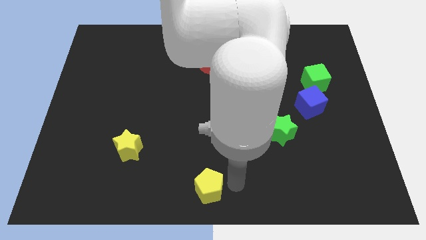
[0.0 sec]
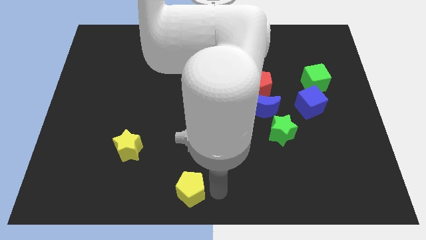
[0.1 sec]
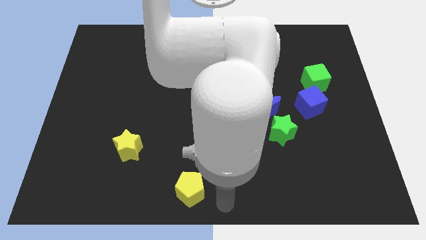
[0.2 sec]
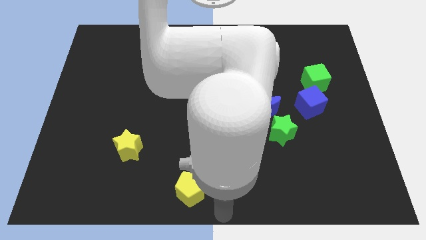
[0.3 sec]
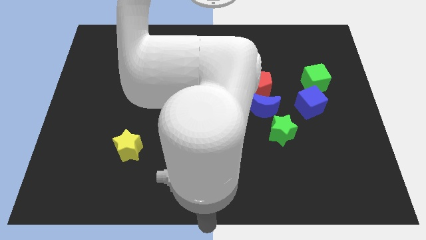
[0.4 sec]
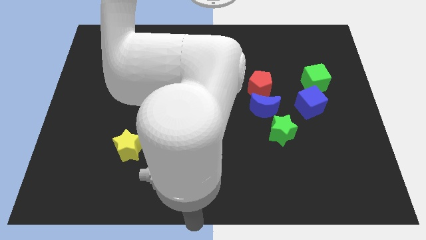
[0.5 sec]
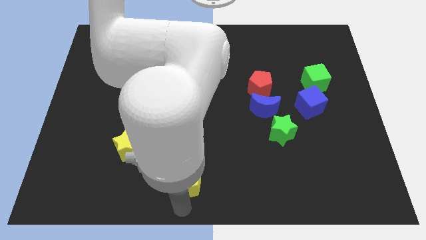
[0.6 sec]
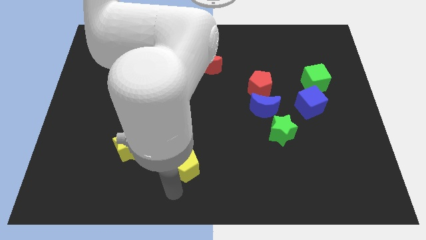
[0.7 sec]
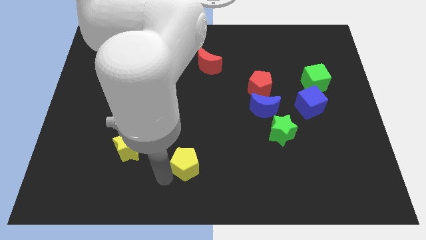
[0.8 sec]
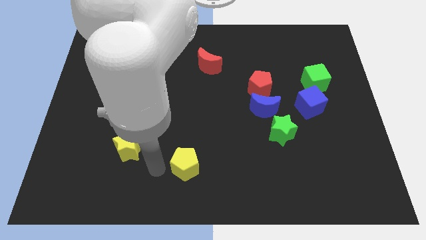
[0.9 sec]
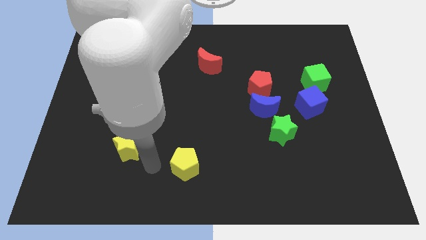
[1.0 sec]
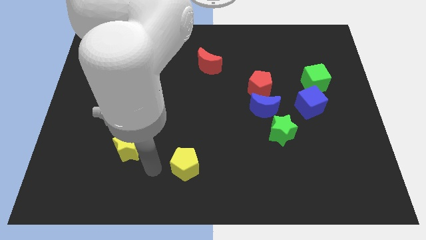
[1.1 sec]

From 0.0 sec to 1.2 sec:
push the yellow pentagon slightly upward

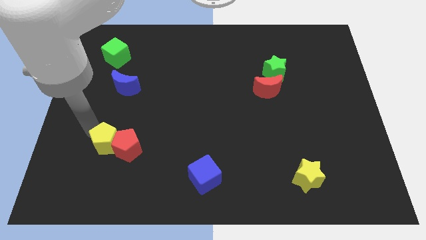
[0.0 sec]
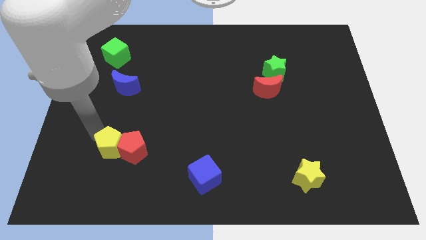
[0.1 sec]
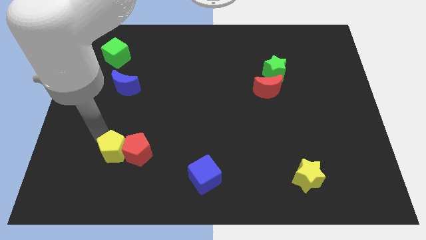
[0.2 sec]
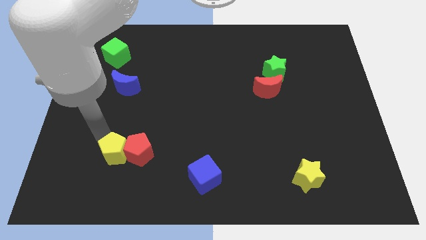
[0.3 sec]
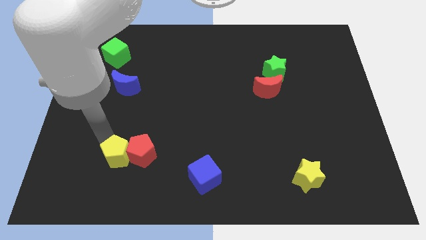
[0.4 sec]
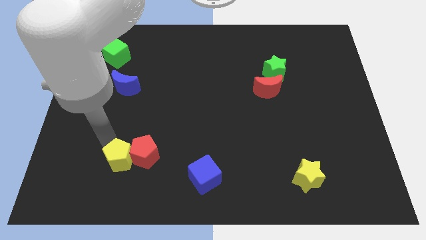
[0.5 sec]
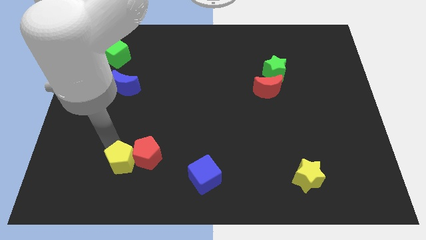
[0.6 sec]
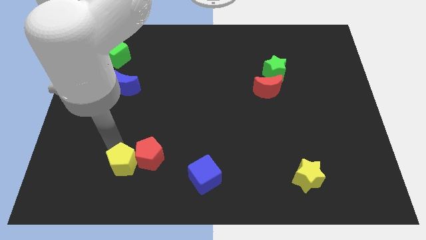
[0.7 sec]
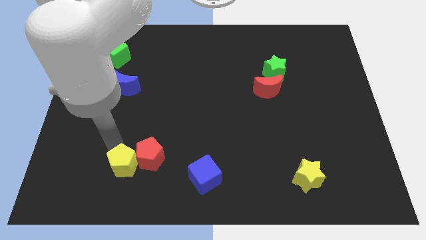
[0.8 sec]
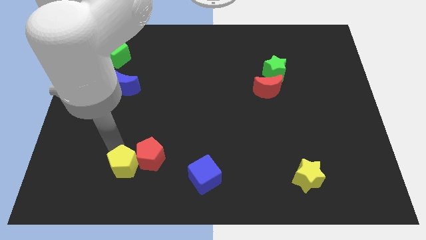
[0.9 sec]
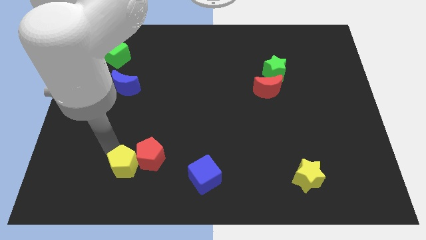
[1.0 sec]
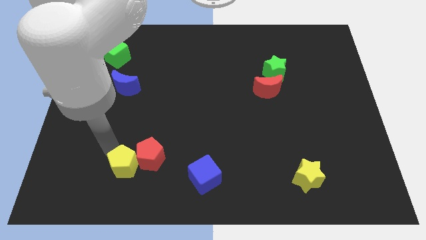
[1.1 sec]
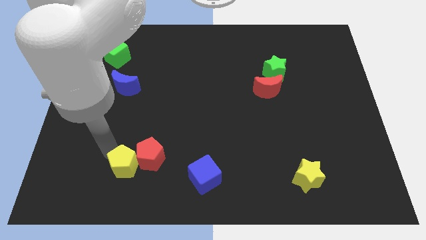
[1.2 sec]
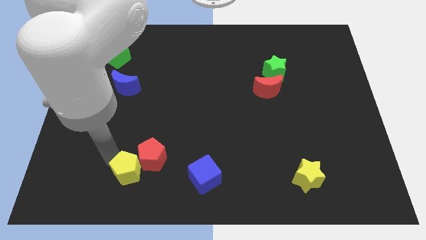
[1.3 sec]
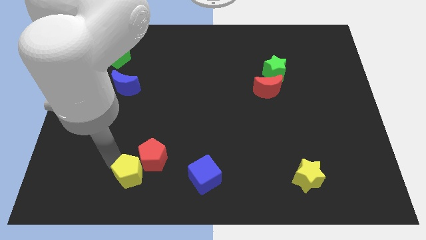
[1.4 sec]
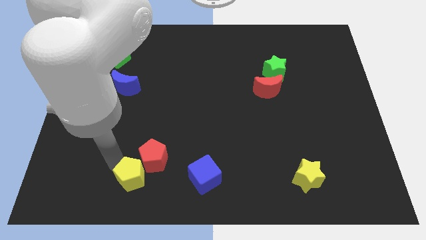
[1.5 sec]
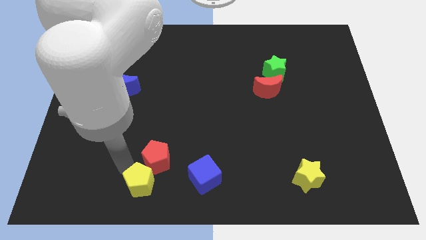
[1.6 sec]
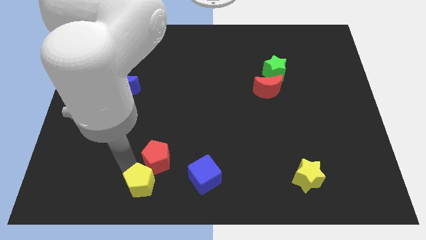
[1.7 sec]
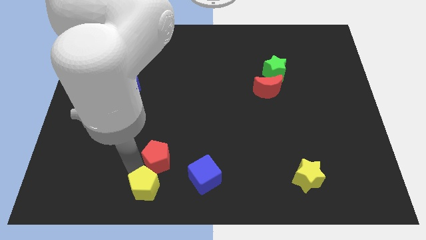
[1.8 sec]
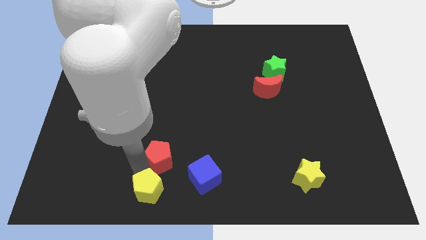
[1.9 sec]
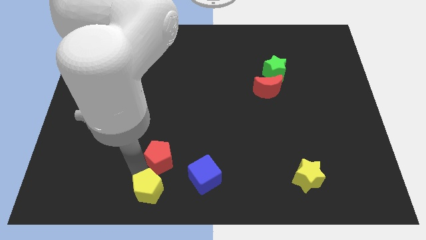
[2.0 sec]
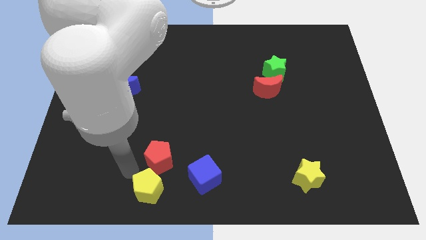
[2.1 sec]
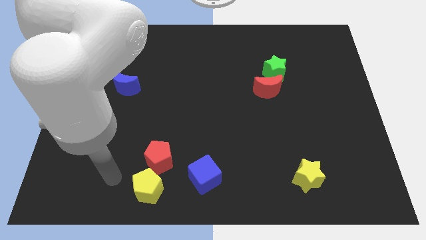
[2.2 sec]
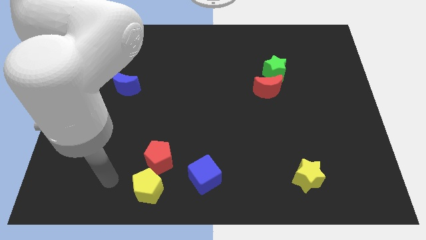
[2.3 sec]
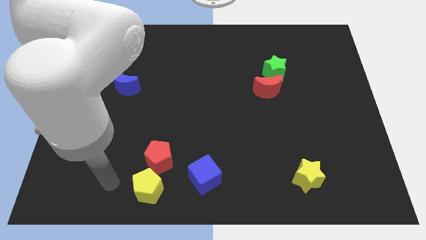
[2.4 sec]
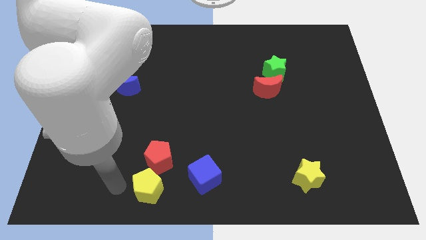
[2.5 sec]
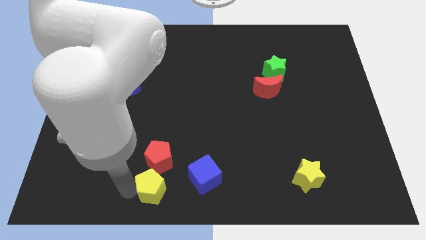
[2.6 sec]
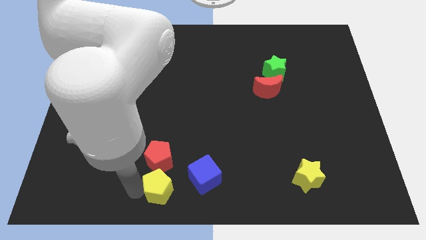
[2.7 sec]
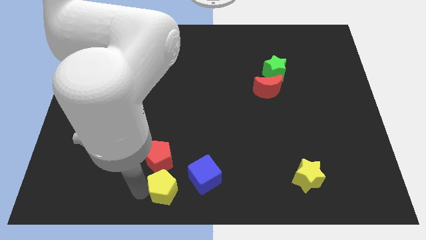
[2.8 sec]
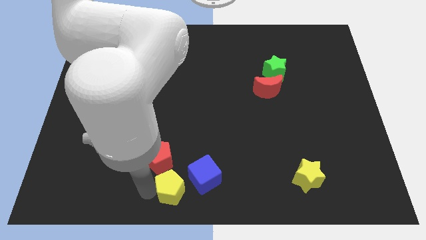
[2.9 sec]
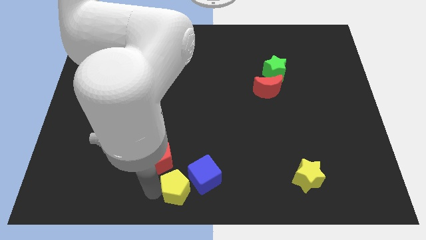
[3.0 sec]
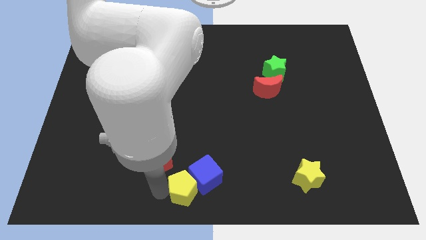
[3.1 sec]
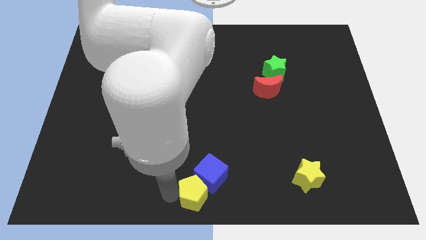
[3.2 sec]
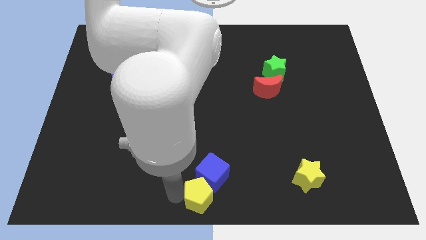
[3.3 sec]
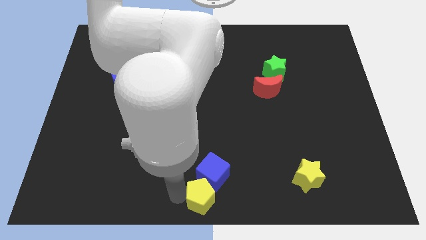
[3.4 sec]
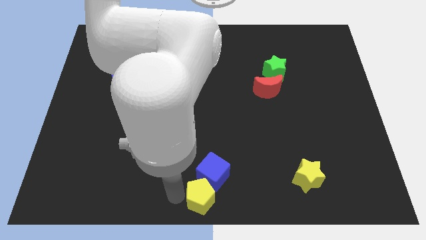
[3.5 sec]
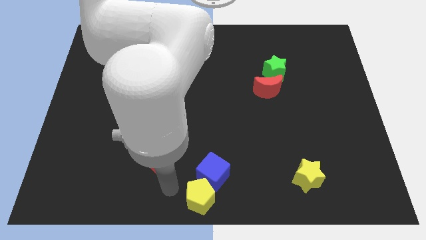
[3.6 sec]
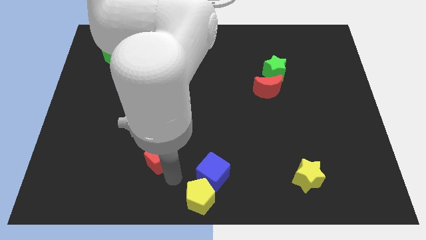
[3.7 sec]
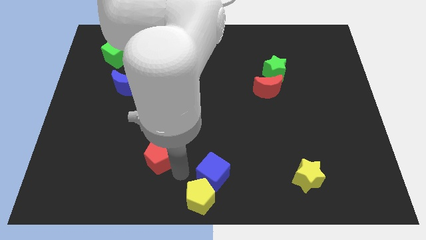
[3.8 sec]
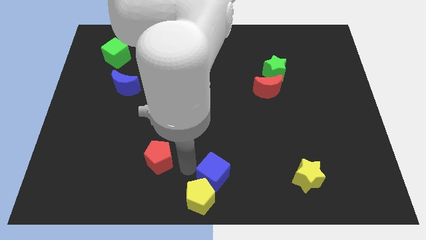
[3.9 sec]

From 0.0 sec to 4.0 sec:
push the yellow pentagon below the blue cube

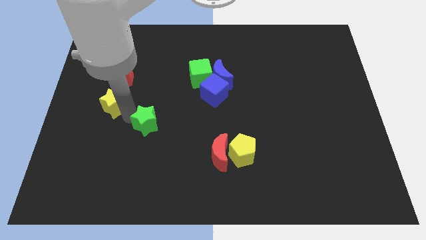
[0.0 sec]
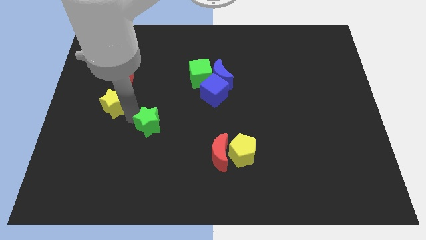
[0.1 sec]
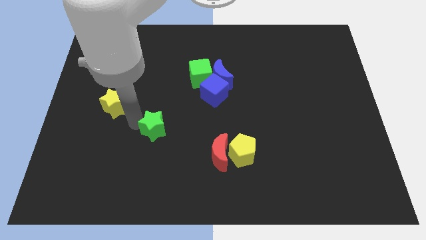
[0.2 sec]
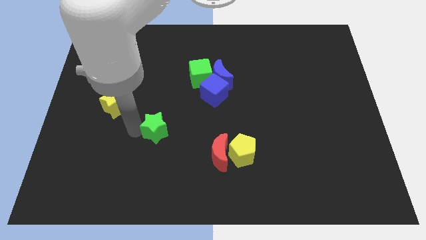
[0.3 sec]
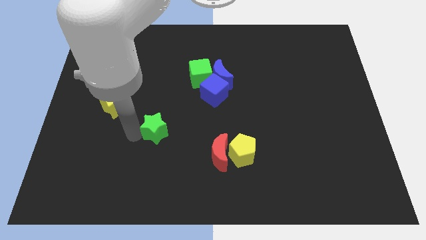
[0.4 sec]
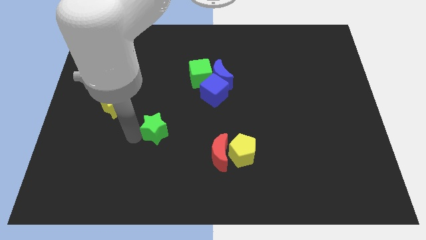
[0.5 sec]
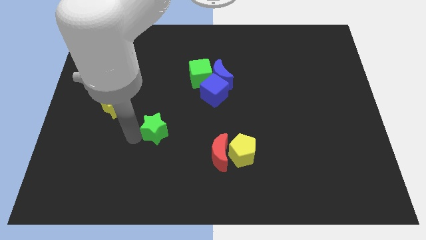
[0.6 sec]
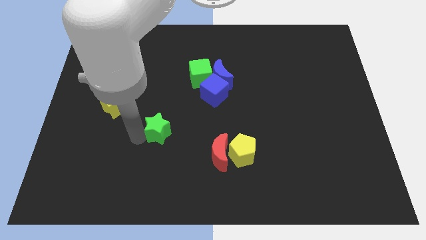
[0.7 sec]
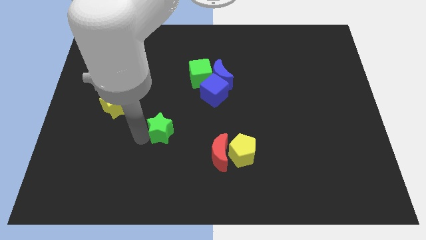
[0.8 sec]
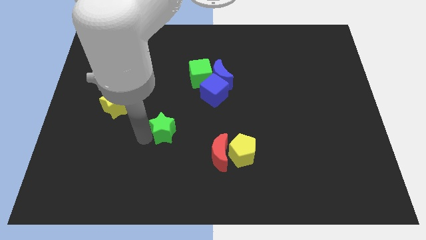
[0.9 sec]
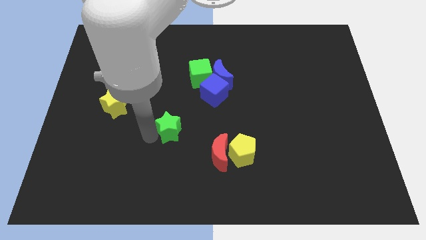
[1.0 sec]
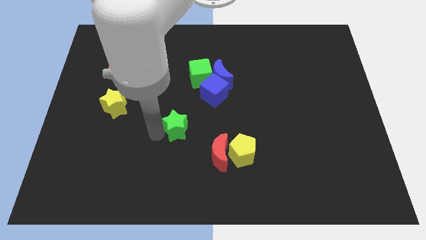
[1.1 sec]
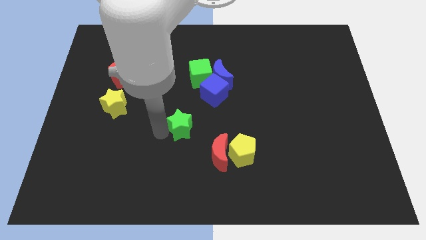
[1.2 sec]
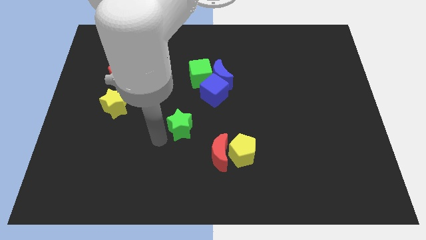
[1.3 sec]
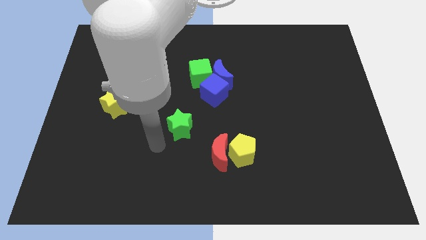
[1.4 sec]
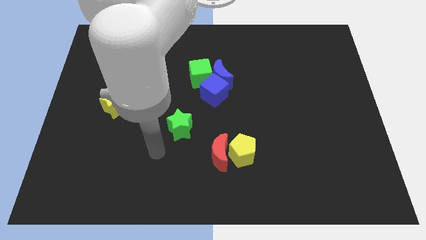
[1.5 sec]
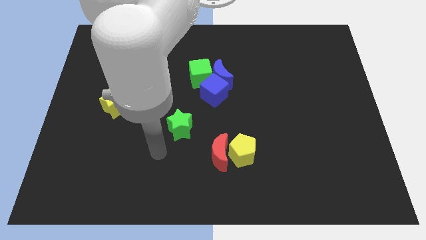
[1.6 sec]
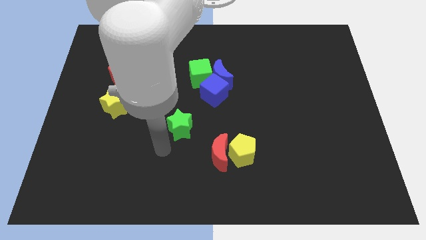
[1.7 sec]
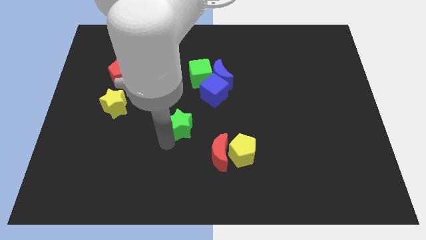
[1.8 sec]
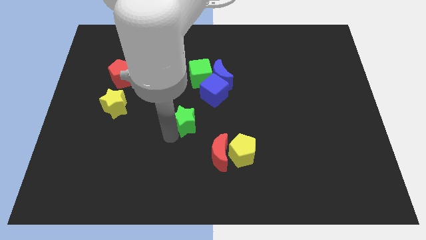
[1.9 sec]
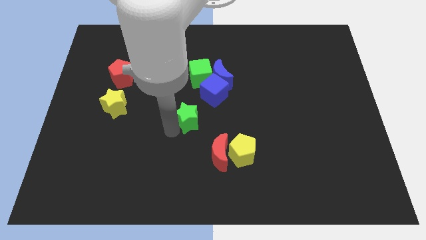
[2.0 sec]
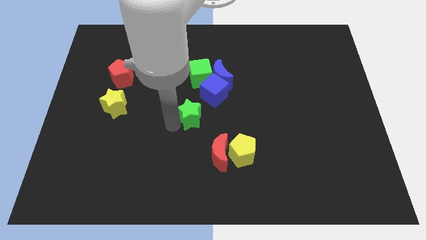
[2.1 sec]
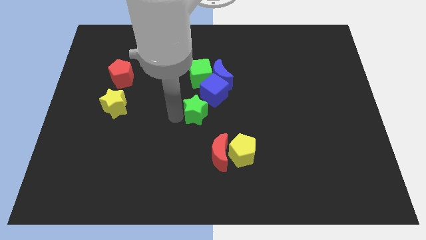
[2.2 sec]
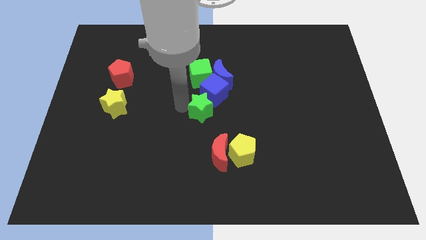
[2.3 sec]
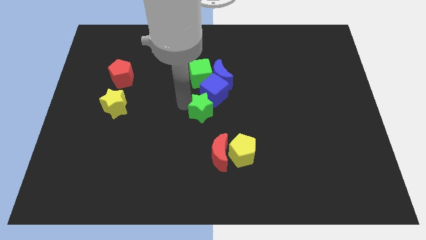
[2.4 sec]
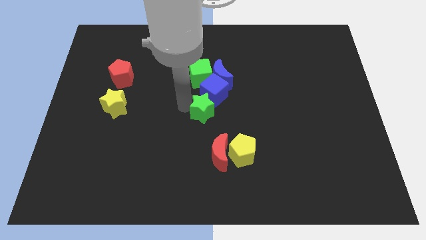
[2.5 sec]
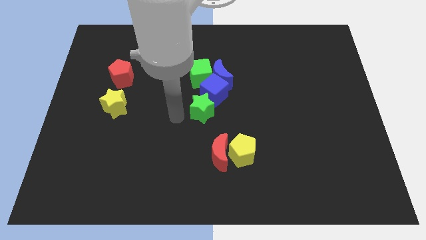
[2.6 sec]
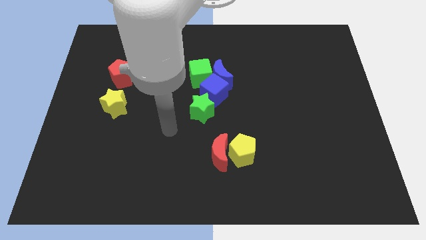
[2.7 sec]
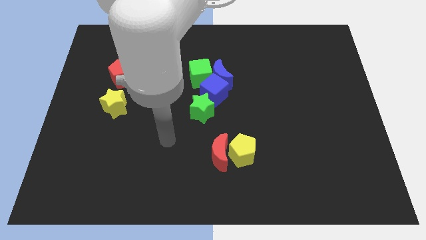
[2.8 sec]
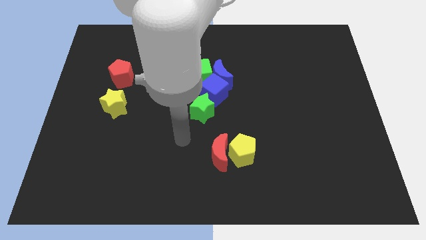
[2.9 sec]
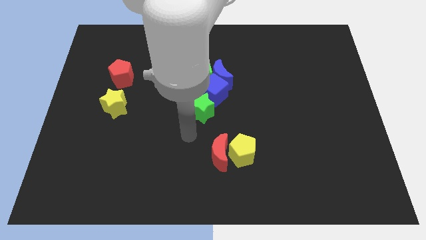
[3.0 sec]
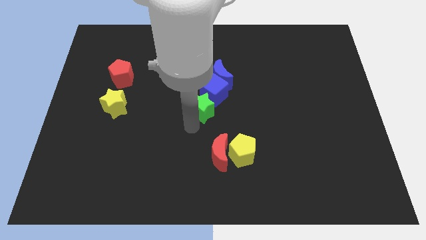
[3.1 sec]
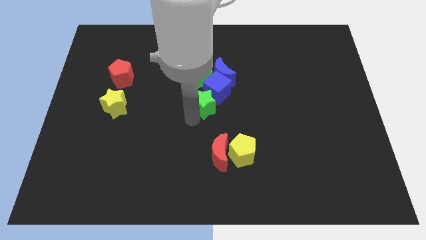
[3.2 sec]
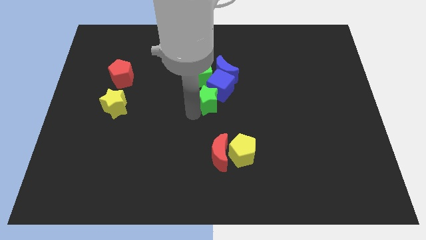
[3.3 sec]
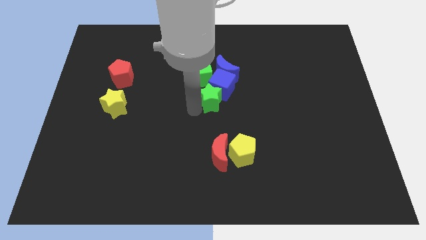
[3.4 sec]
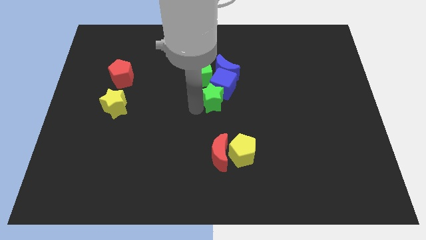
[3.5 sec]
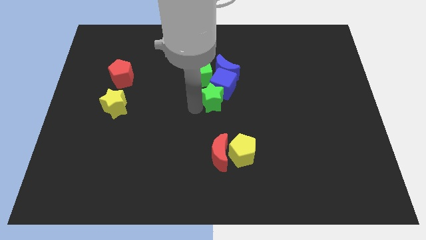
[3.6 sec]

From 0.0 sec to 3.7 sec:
move the green star into the group of blocks

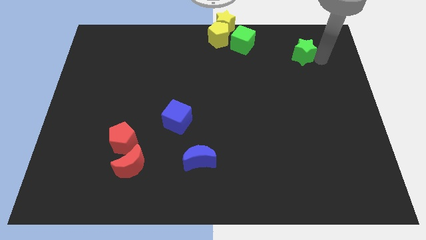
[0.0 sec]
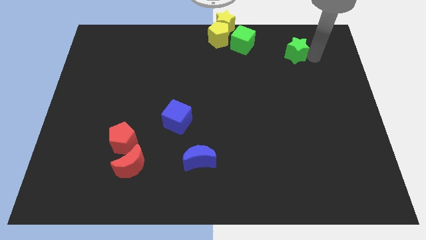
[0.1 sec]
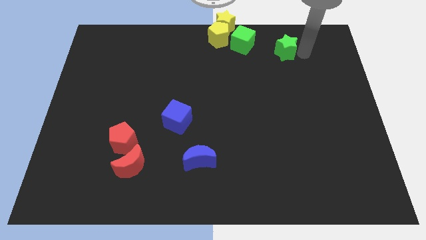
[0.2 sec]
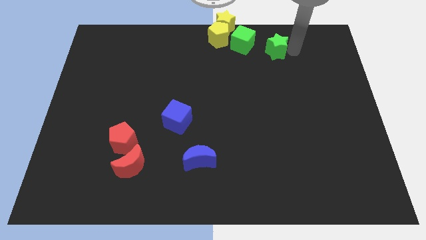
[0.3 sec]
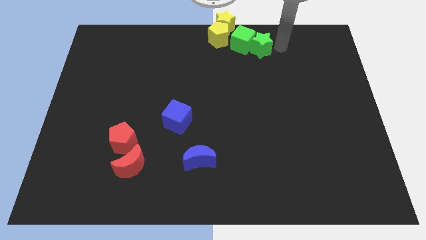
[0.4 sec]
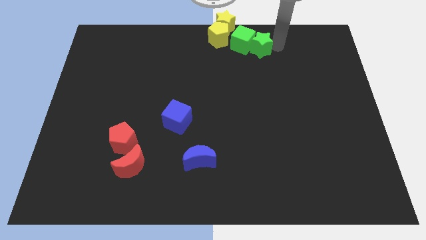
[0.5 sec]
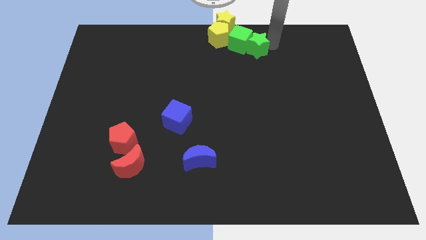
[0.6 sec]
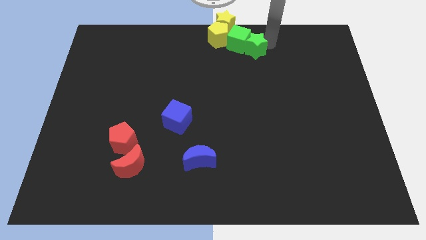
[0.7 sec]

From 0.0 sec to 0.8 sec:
move the green star into the green cube
